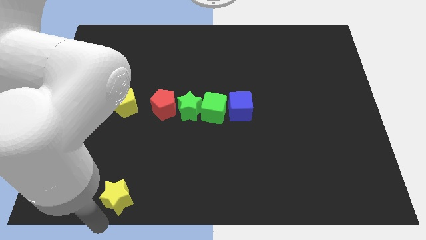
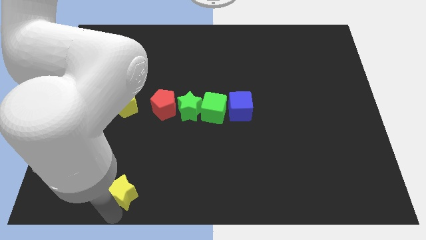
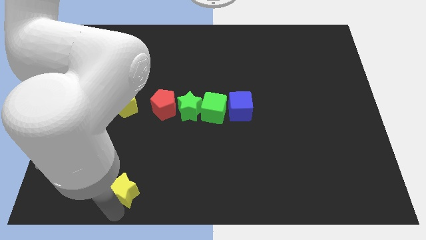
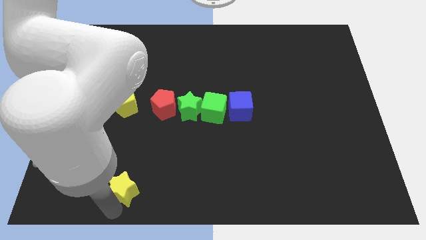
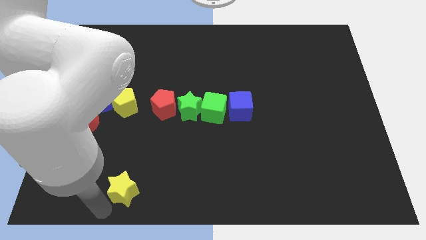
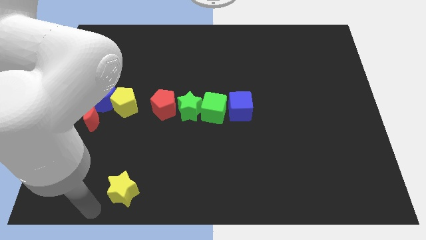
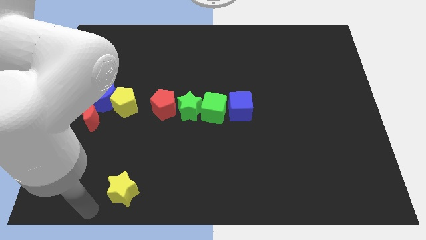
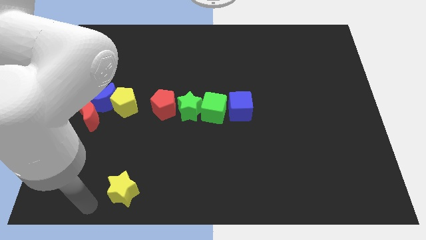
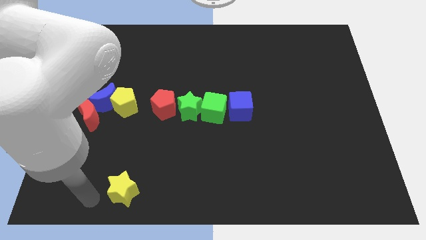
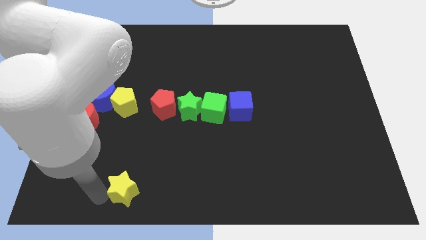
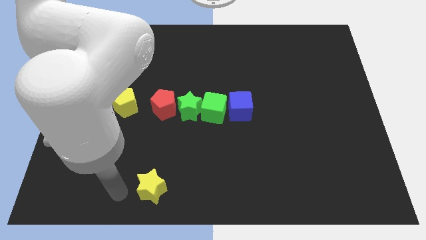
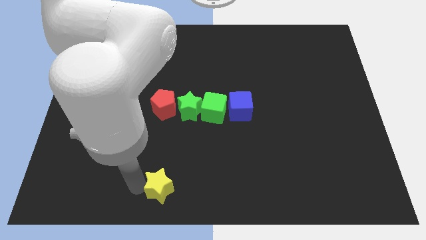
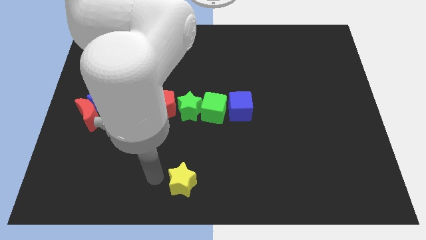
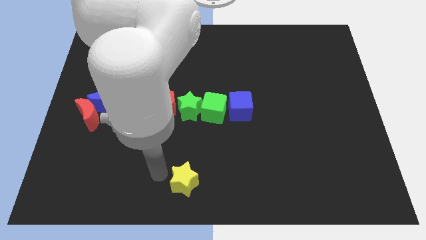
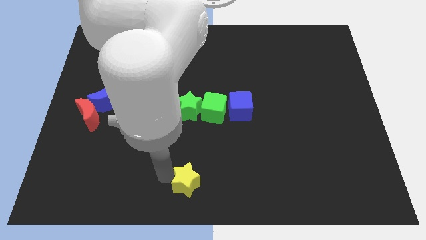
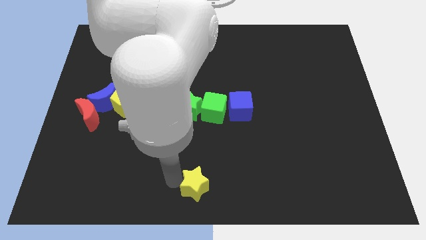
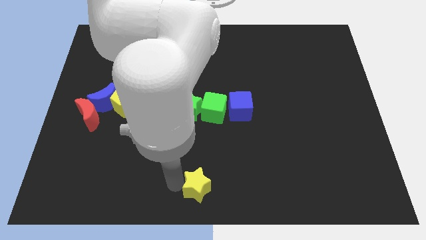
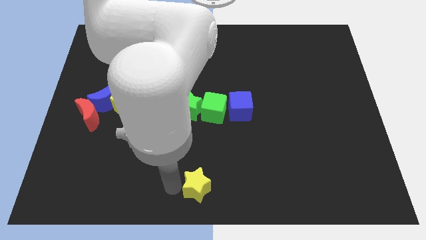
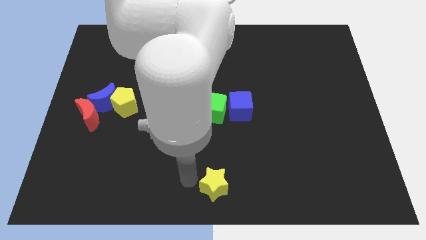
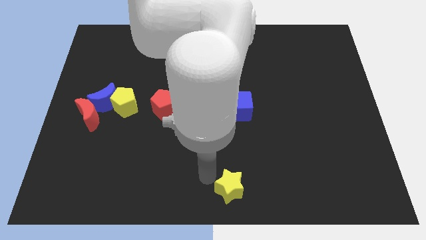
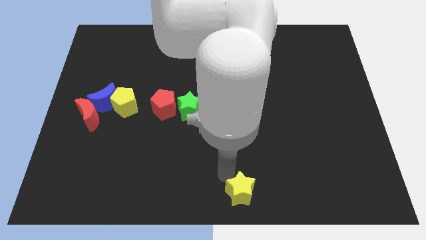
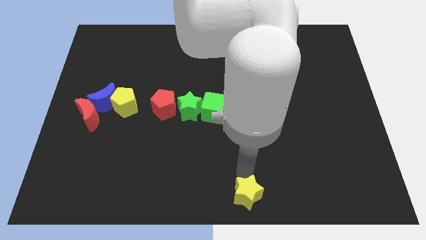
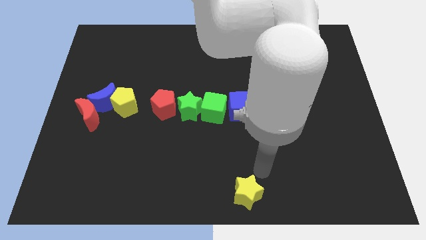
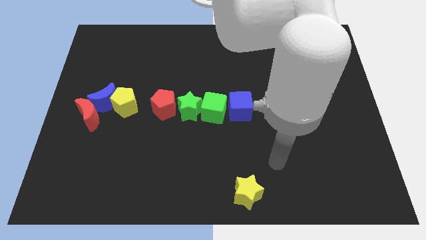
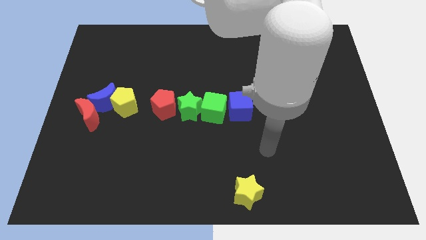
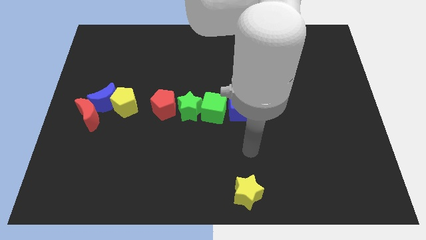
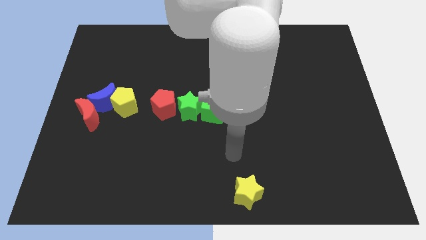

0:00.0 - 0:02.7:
push the yellow star to its right

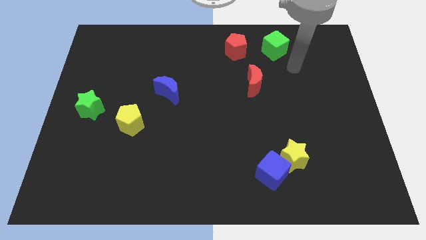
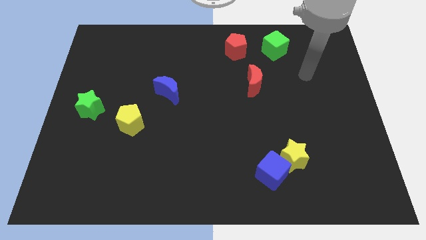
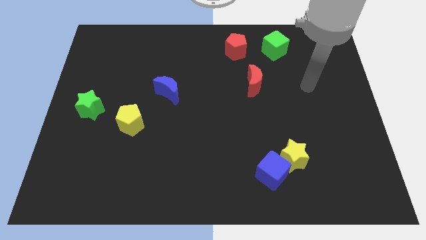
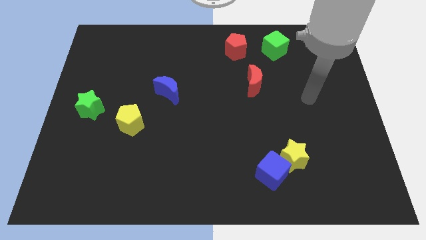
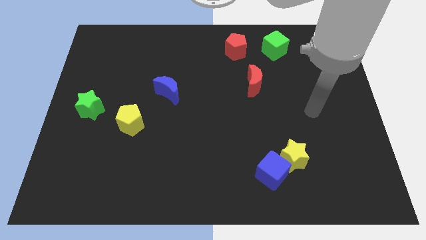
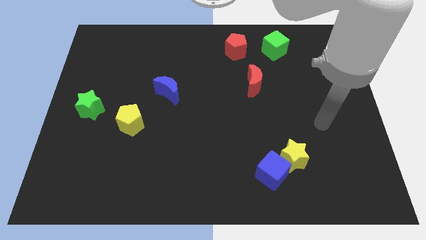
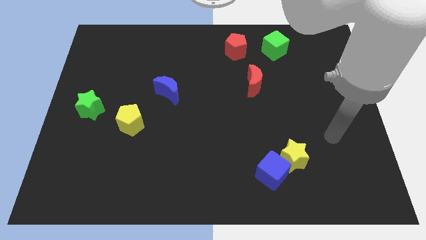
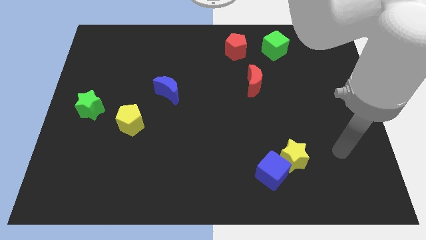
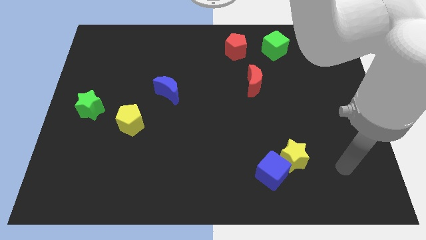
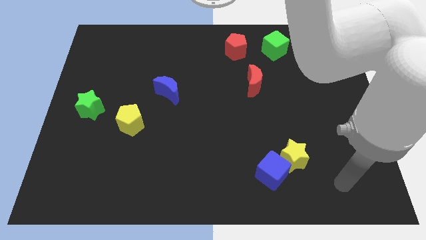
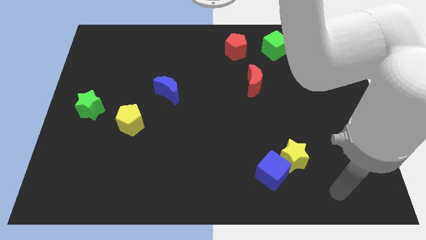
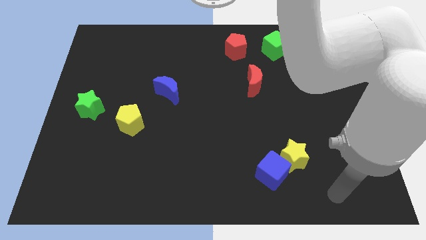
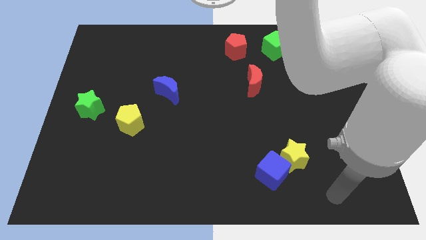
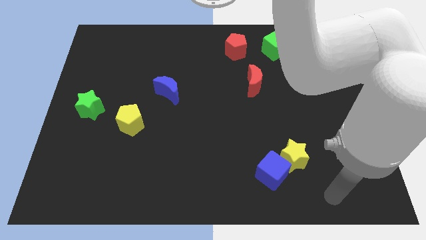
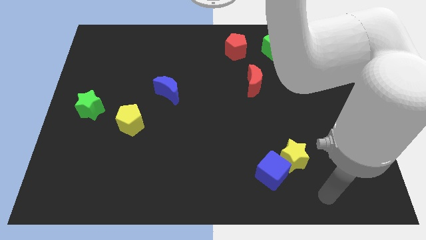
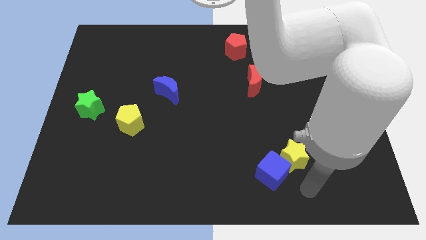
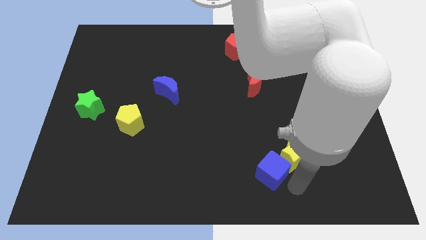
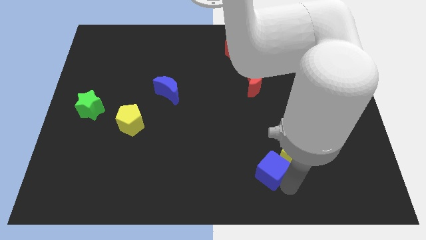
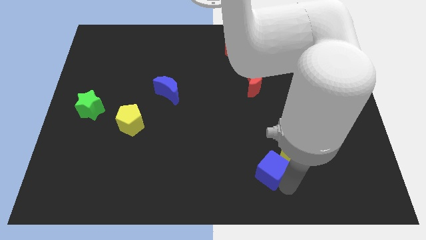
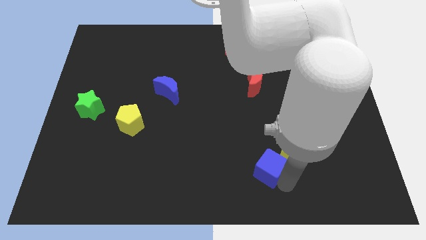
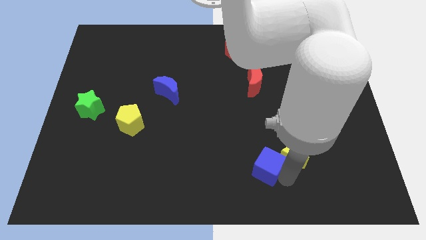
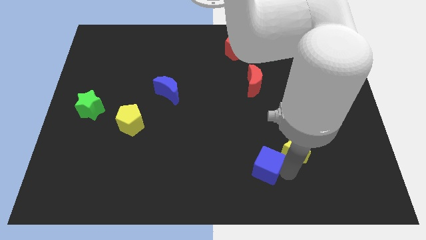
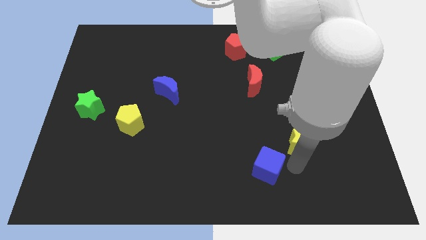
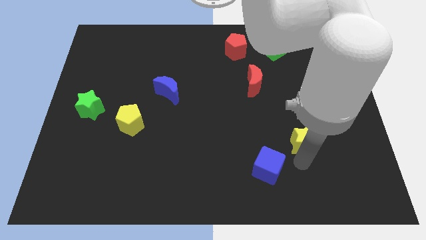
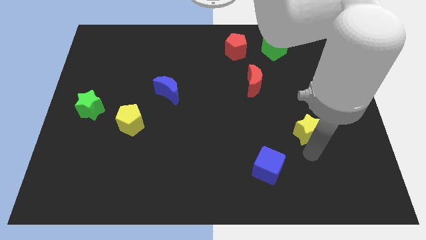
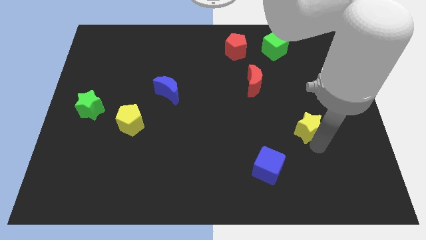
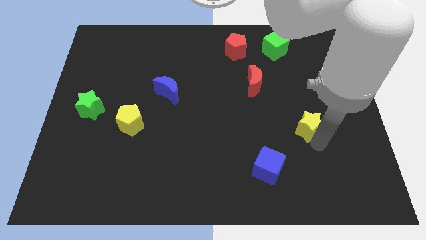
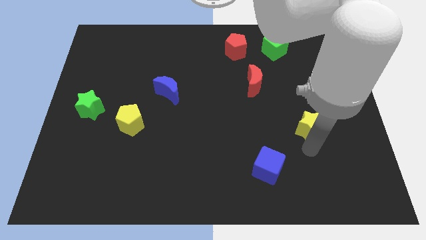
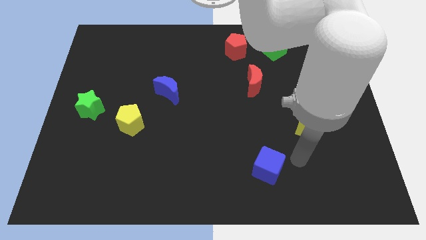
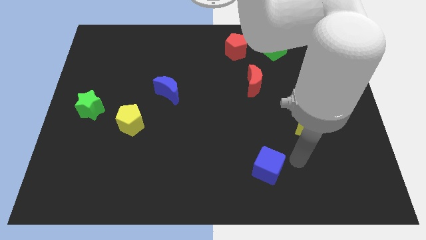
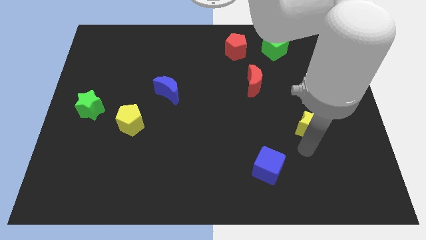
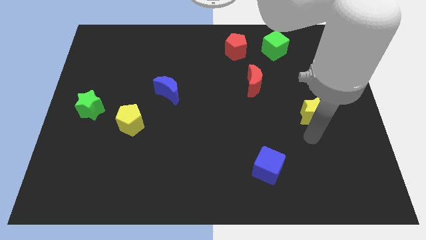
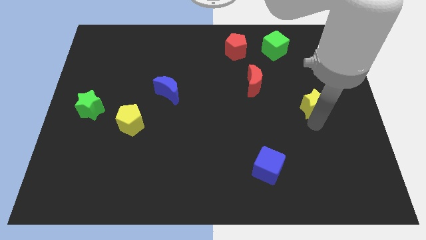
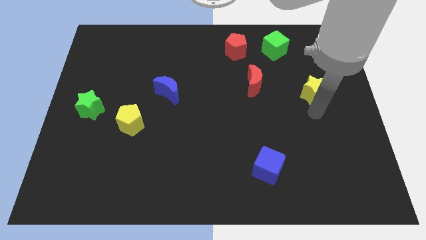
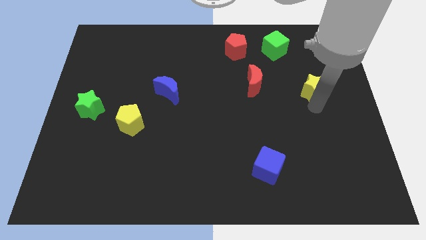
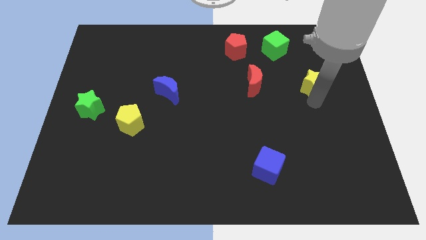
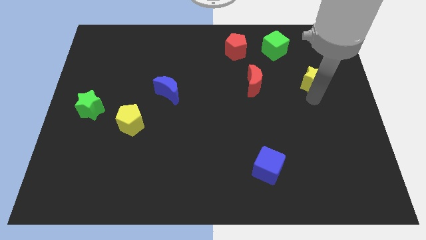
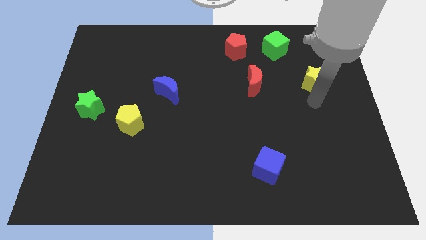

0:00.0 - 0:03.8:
move the yellow star to the right of the red crescent

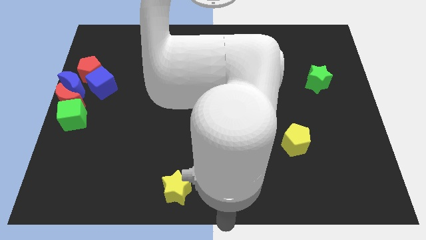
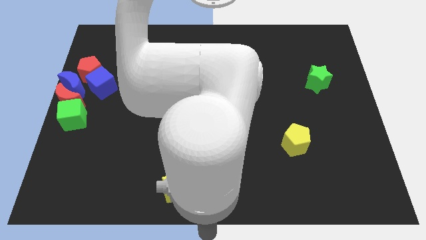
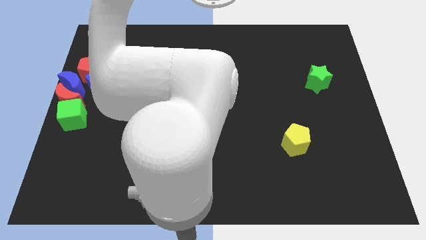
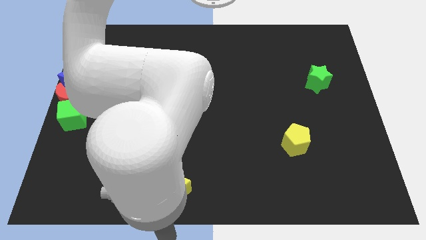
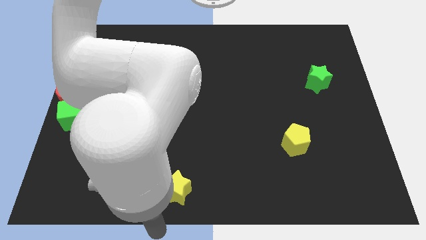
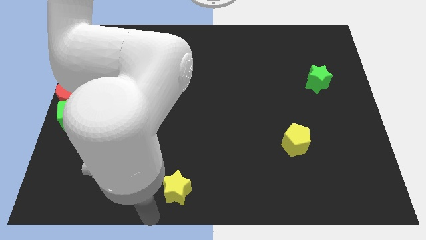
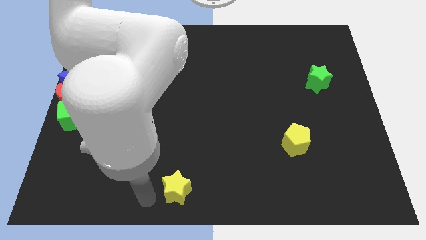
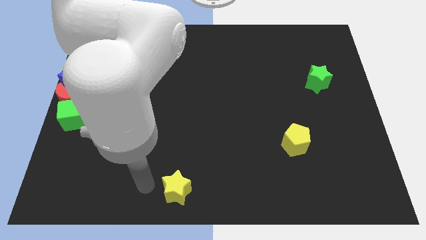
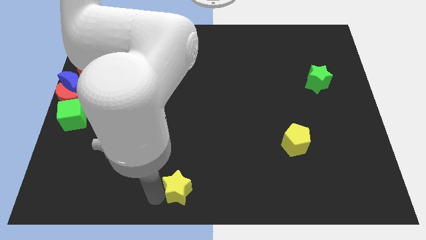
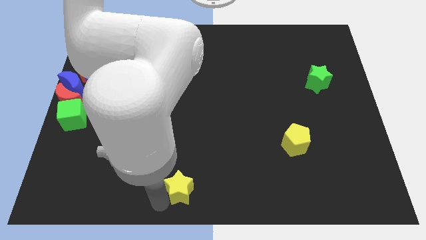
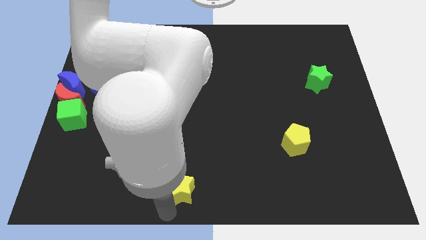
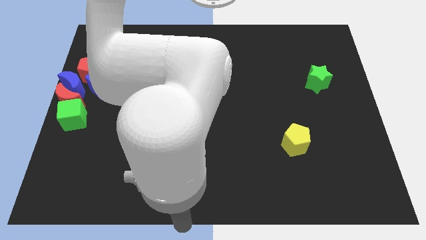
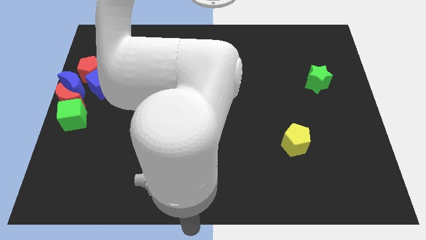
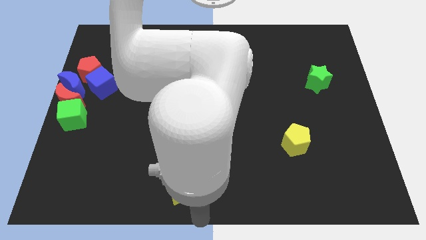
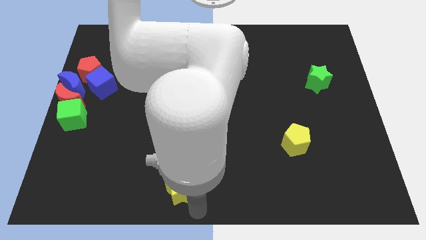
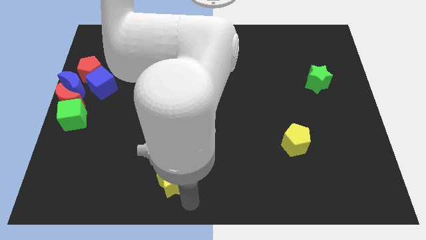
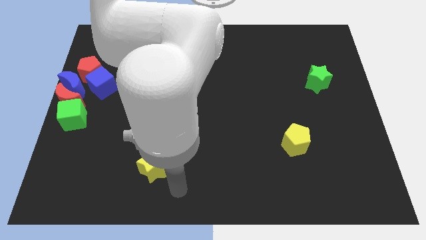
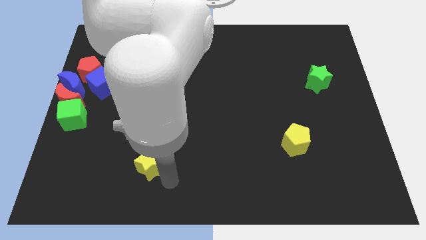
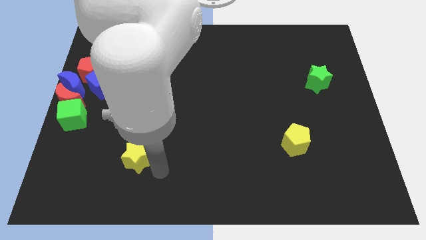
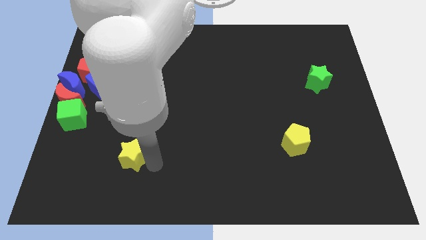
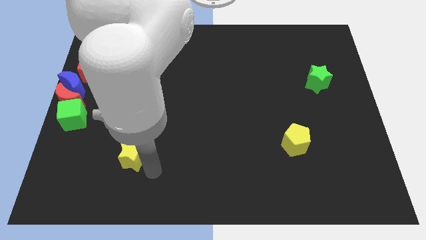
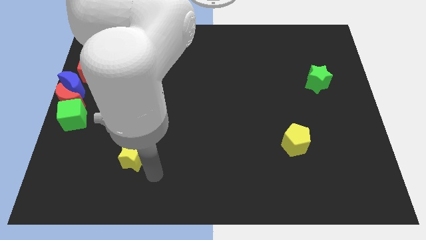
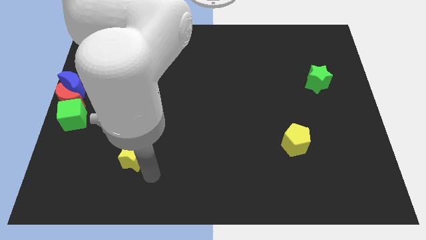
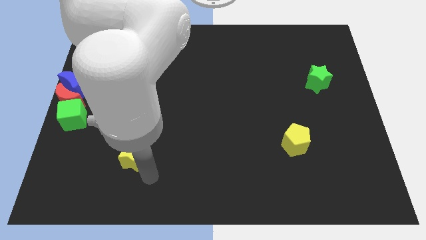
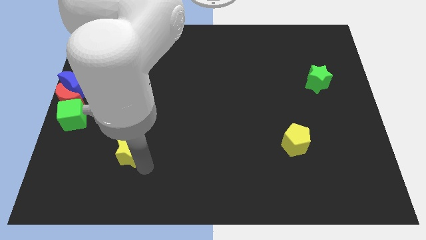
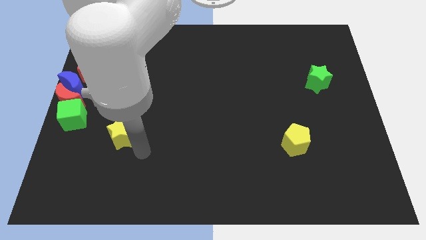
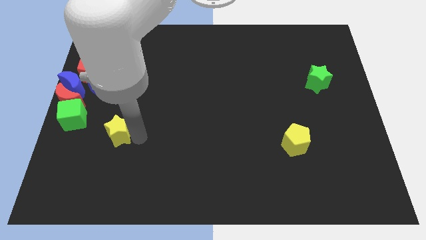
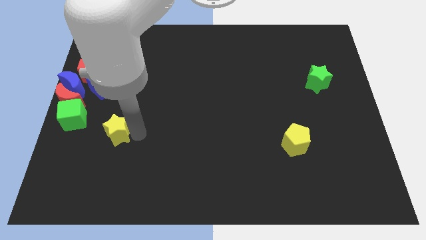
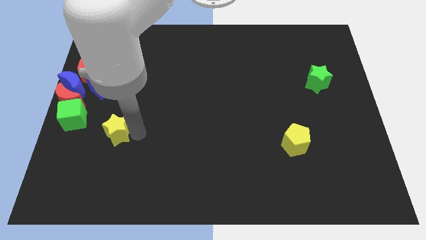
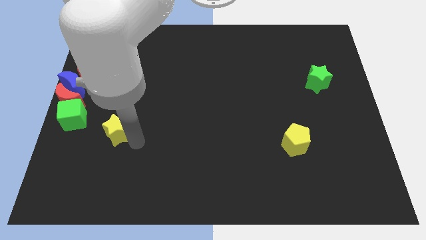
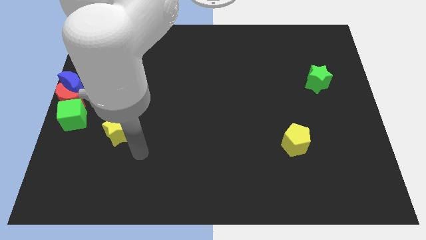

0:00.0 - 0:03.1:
slide yellow star towards green cube
